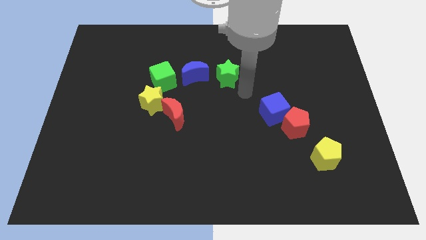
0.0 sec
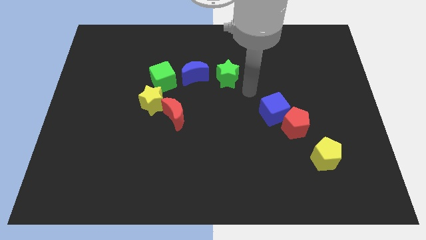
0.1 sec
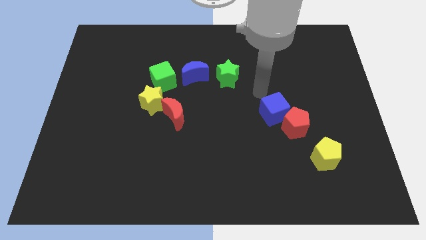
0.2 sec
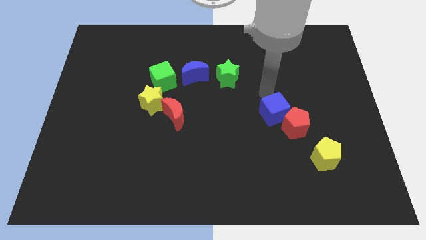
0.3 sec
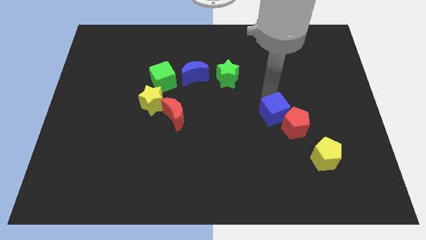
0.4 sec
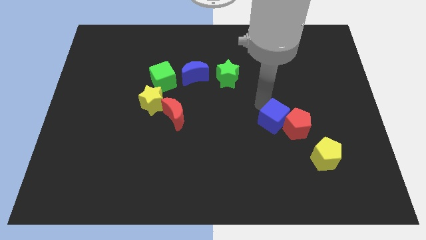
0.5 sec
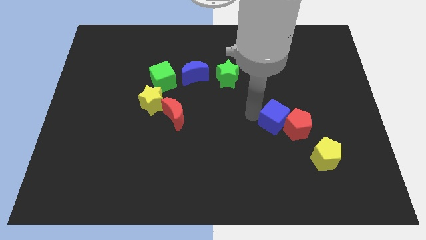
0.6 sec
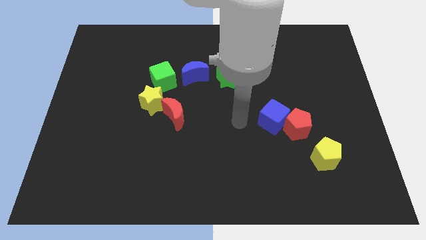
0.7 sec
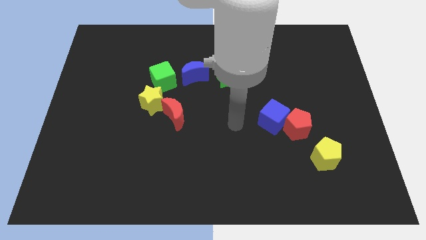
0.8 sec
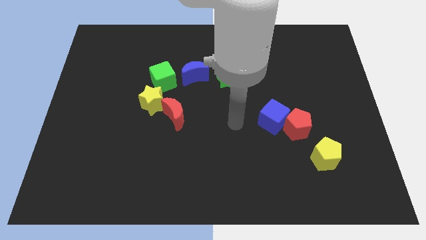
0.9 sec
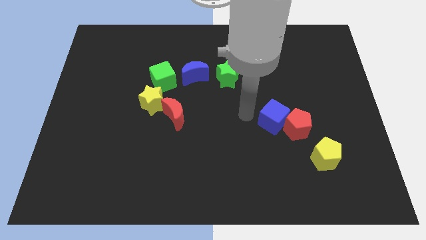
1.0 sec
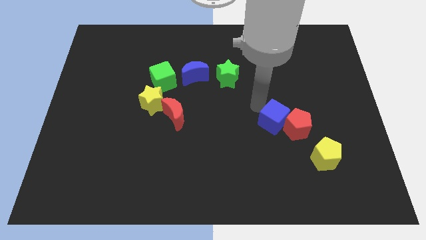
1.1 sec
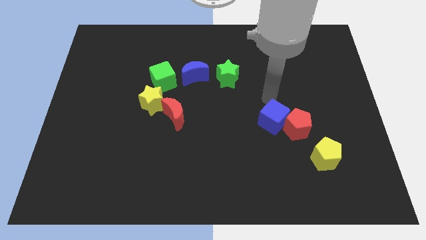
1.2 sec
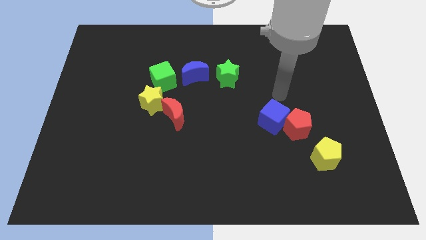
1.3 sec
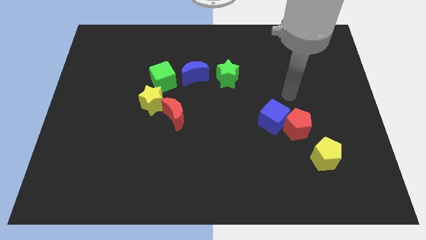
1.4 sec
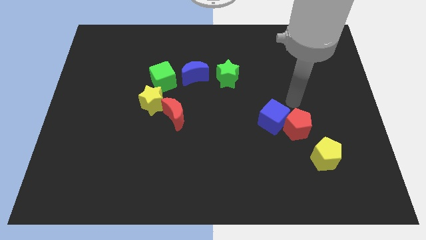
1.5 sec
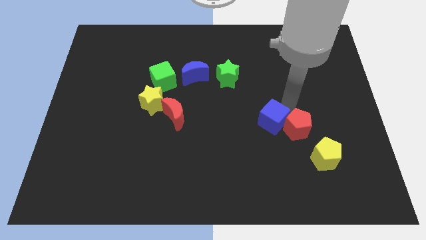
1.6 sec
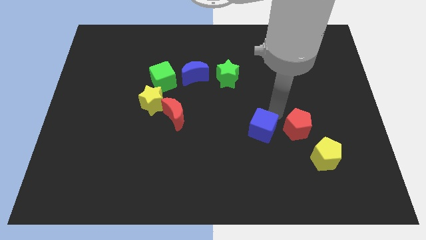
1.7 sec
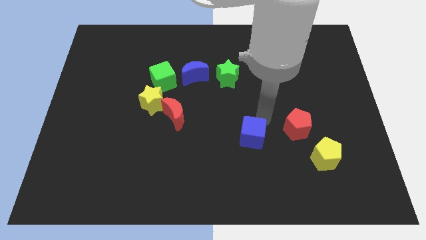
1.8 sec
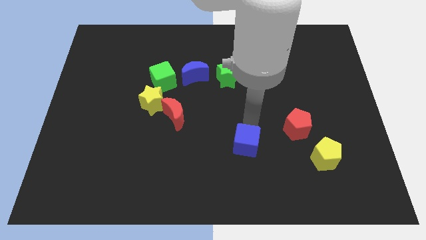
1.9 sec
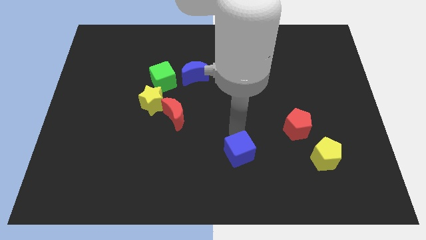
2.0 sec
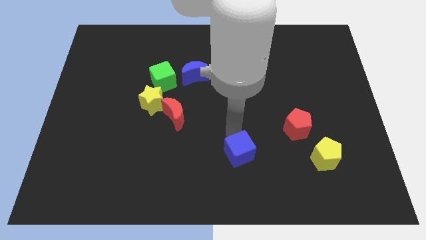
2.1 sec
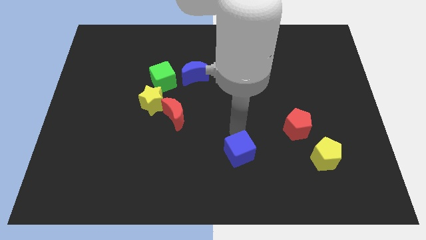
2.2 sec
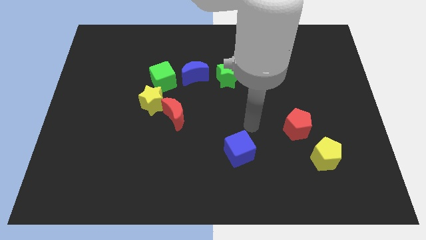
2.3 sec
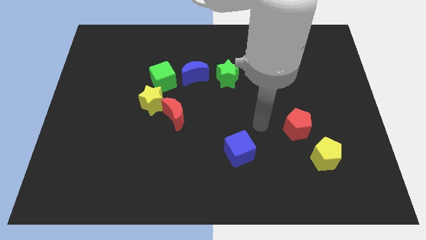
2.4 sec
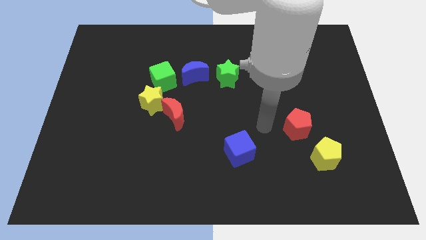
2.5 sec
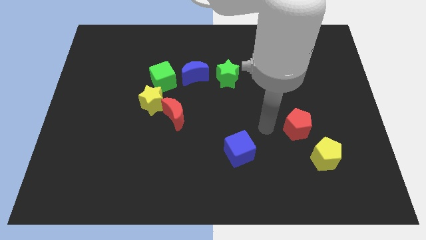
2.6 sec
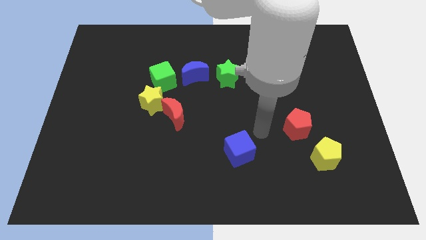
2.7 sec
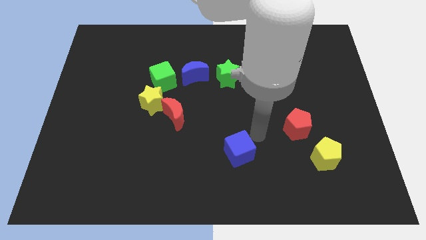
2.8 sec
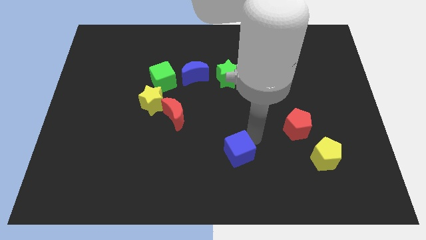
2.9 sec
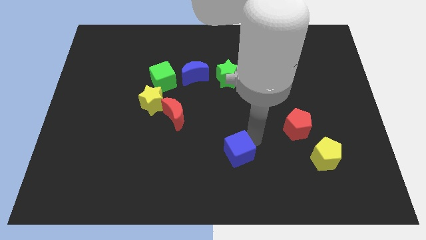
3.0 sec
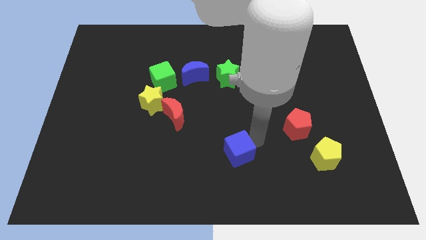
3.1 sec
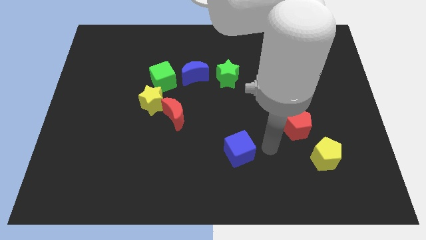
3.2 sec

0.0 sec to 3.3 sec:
place the blue cube below the red pentagon

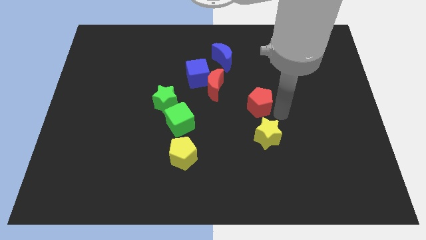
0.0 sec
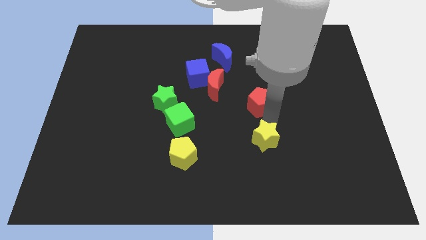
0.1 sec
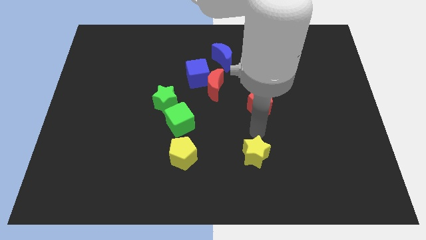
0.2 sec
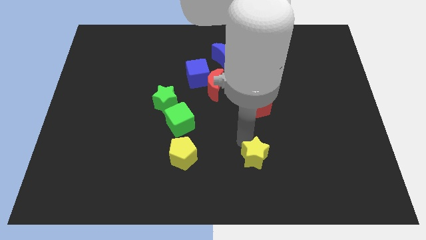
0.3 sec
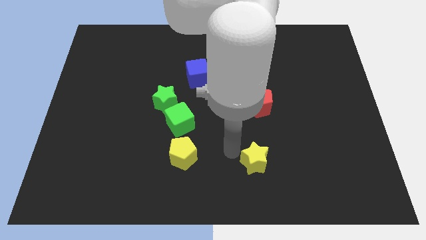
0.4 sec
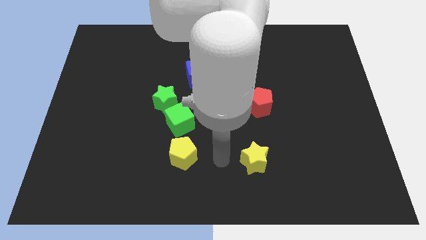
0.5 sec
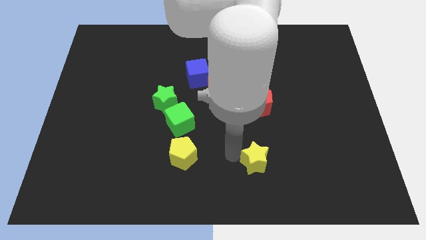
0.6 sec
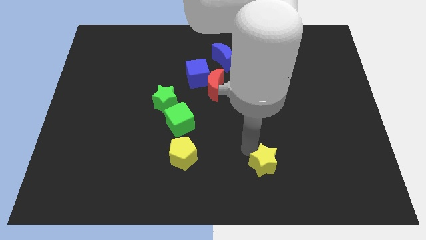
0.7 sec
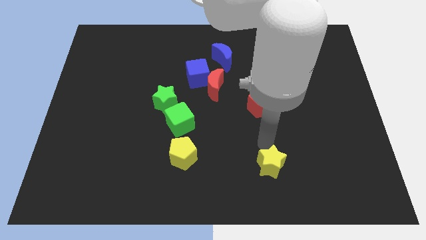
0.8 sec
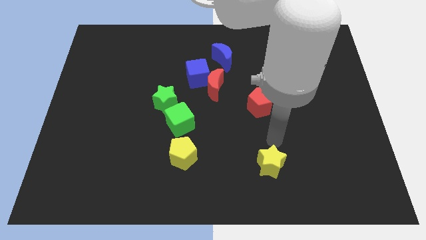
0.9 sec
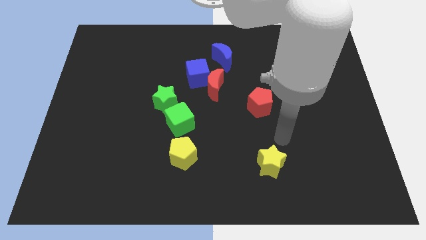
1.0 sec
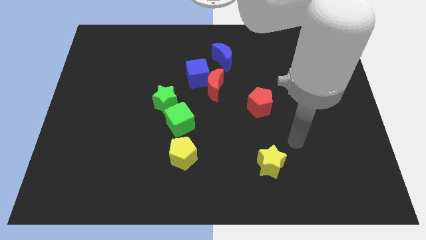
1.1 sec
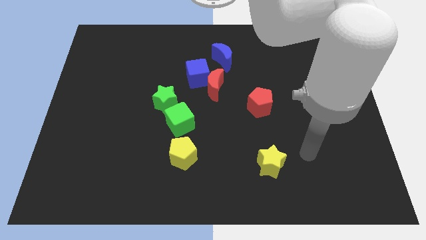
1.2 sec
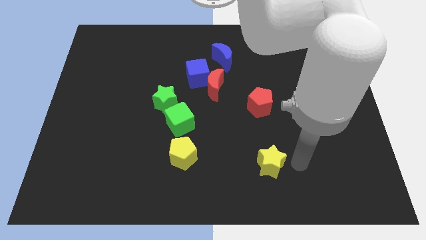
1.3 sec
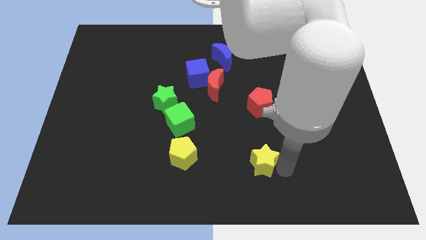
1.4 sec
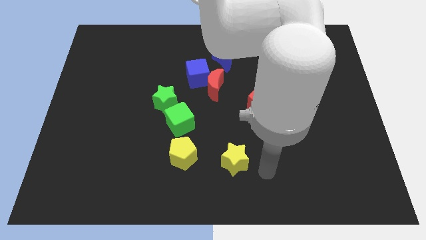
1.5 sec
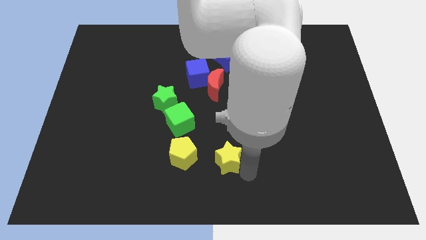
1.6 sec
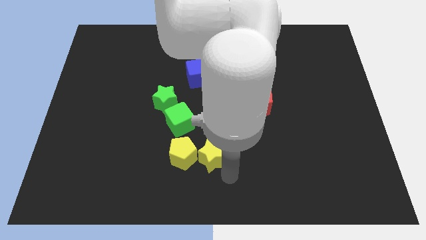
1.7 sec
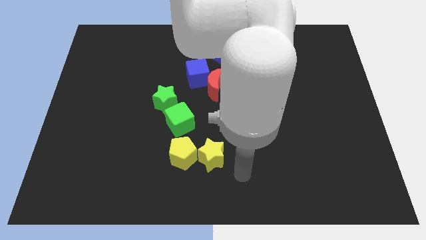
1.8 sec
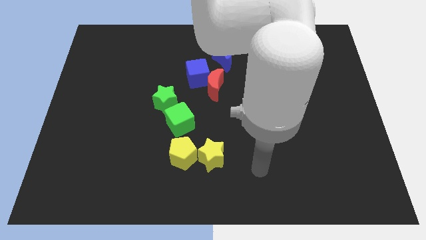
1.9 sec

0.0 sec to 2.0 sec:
place yellow star to the right of yellow pentagon

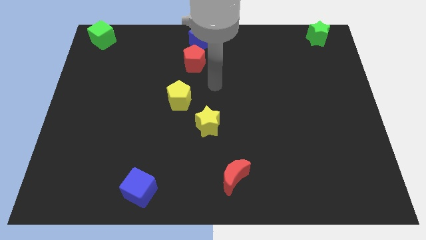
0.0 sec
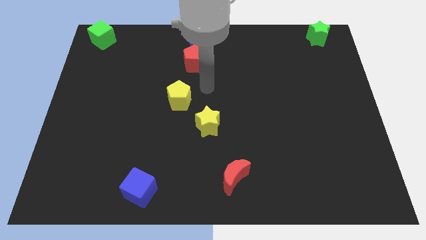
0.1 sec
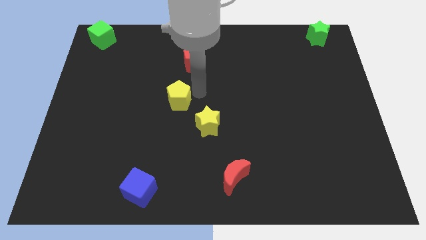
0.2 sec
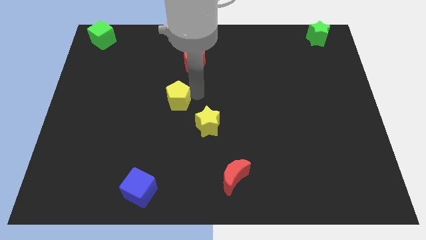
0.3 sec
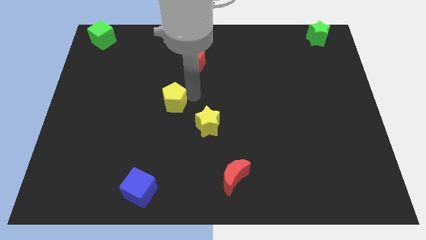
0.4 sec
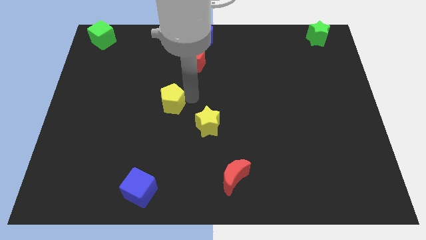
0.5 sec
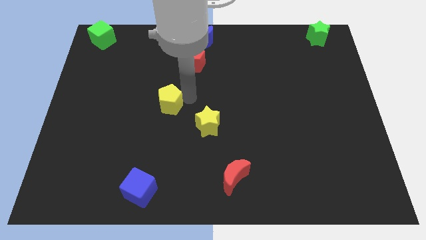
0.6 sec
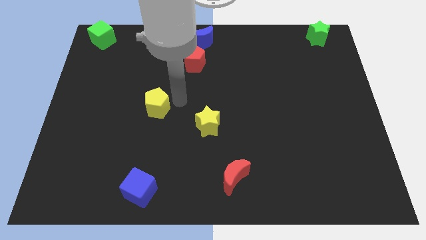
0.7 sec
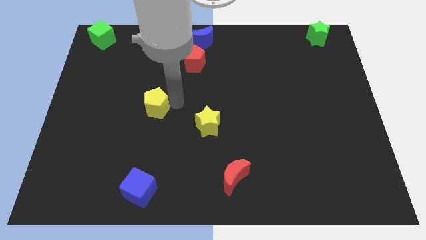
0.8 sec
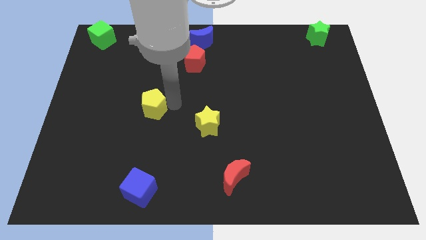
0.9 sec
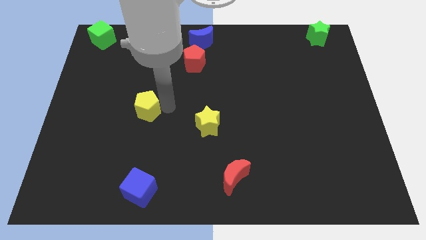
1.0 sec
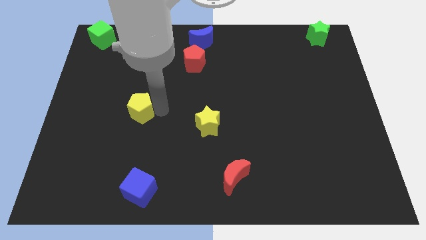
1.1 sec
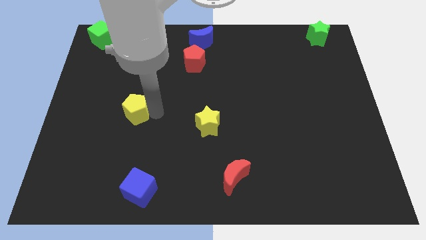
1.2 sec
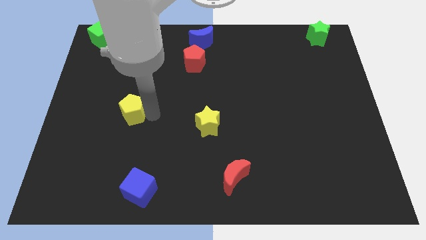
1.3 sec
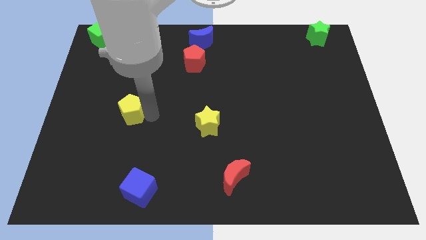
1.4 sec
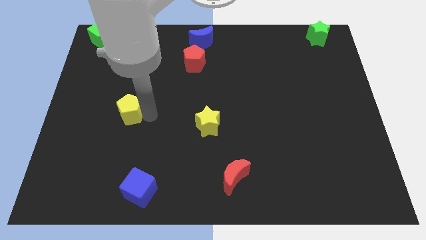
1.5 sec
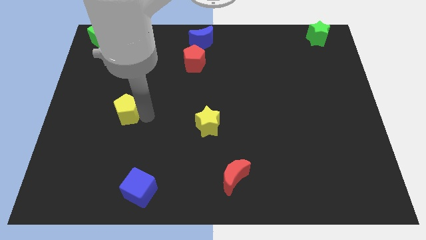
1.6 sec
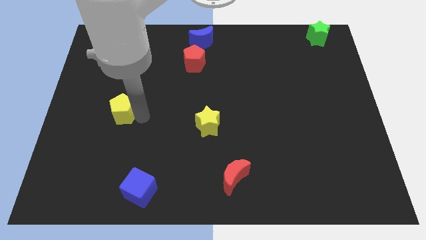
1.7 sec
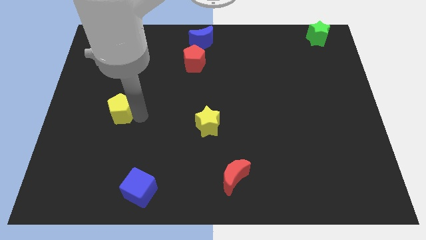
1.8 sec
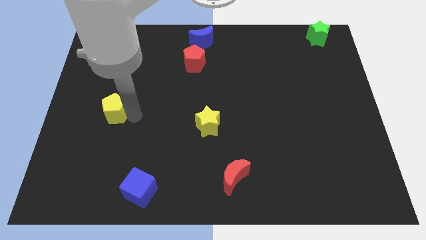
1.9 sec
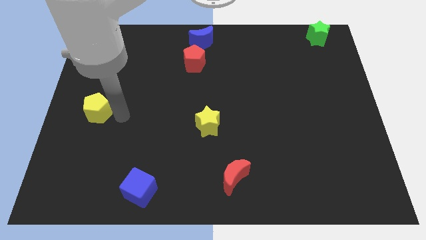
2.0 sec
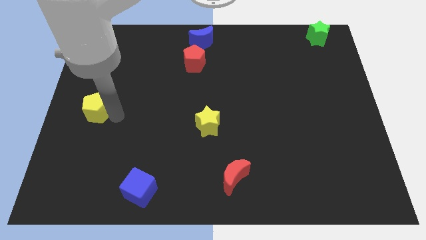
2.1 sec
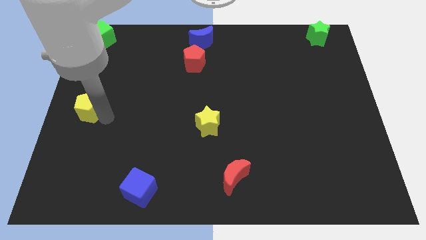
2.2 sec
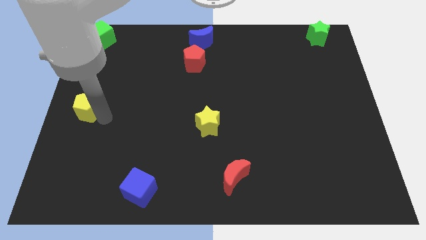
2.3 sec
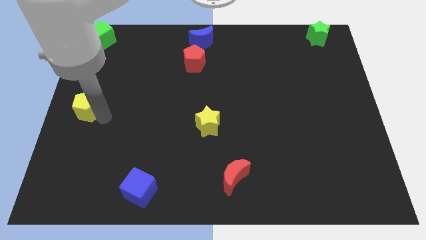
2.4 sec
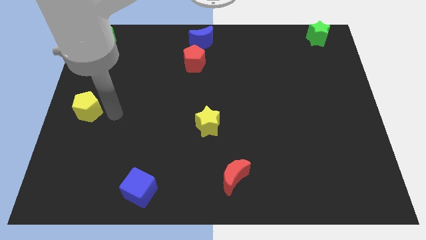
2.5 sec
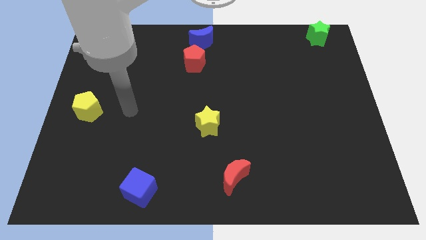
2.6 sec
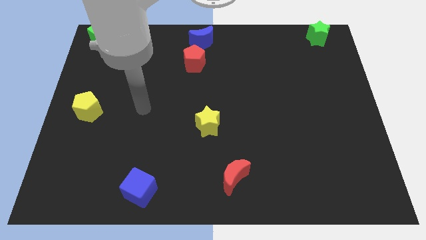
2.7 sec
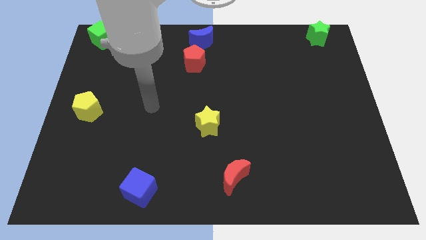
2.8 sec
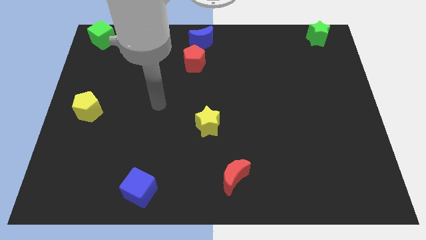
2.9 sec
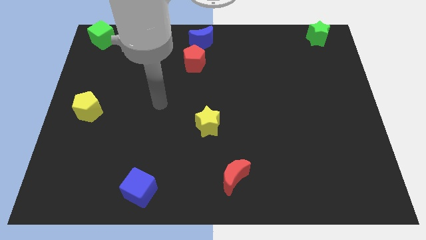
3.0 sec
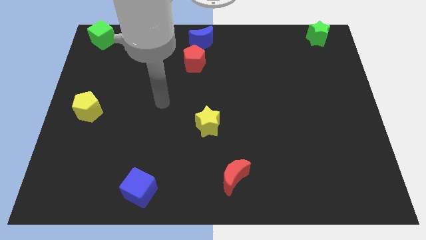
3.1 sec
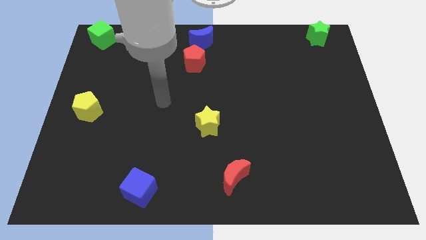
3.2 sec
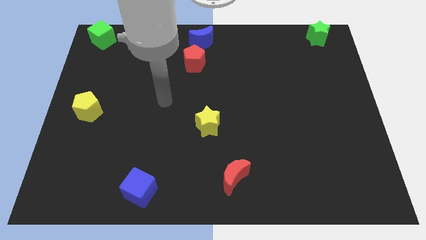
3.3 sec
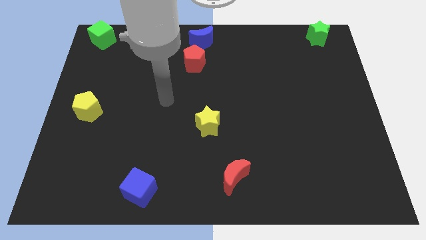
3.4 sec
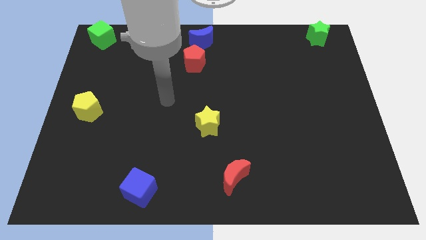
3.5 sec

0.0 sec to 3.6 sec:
push the yellow pentagon towards the center left
